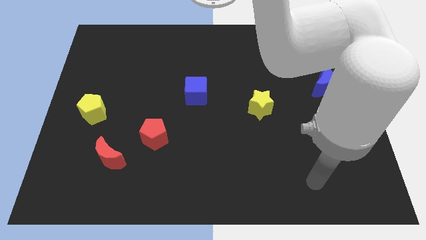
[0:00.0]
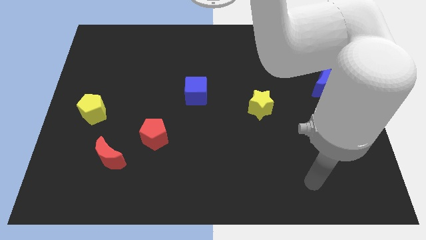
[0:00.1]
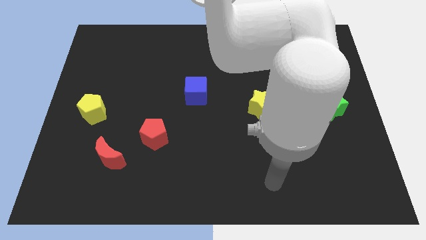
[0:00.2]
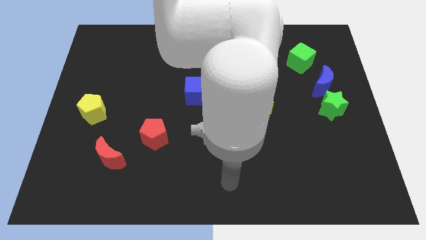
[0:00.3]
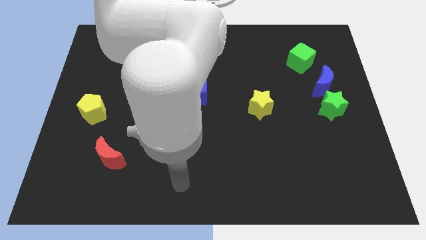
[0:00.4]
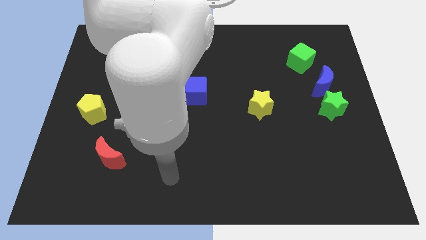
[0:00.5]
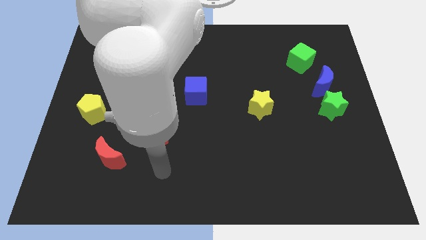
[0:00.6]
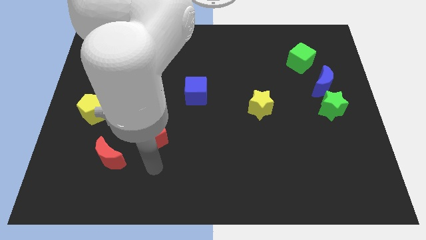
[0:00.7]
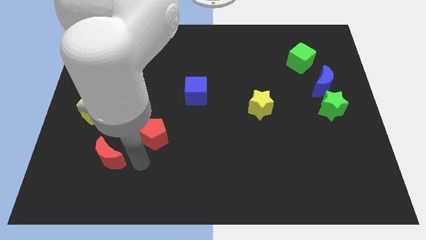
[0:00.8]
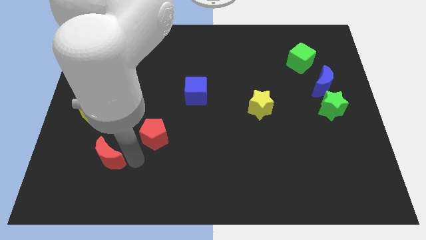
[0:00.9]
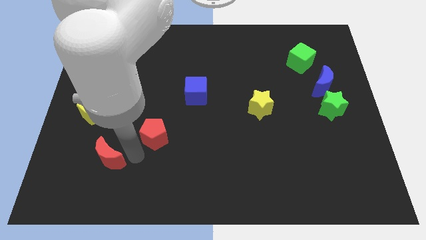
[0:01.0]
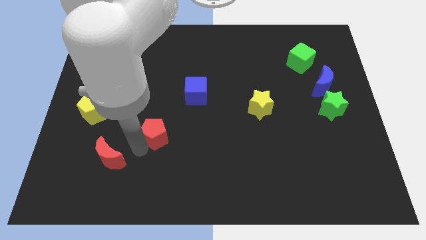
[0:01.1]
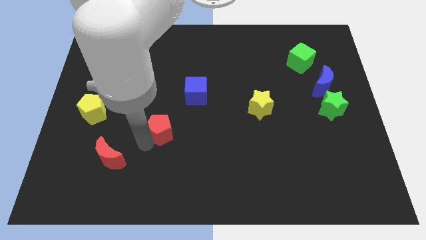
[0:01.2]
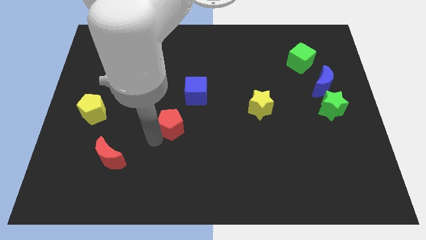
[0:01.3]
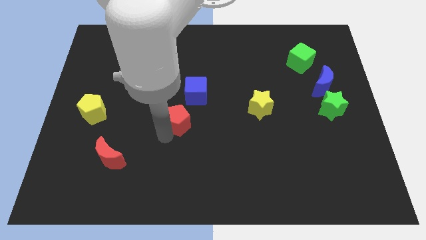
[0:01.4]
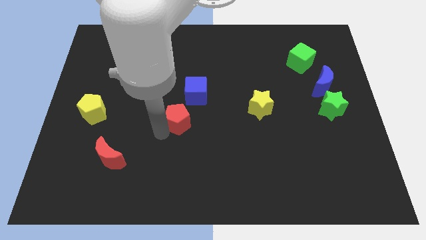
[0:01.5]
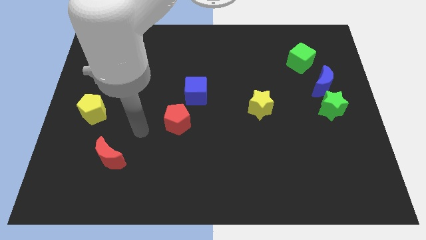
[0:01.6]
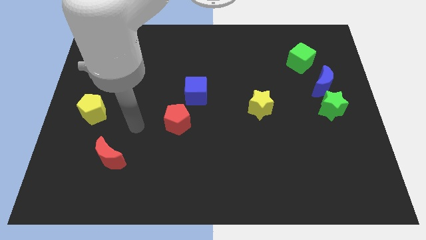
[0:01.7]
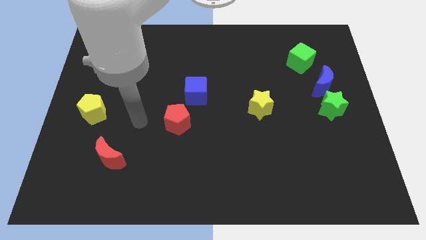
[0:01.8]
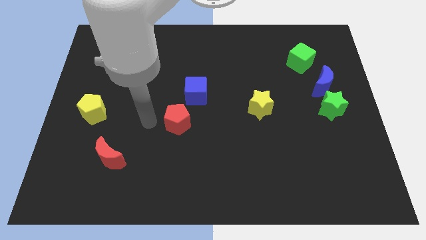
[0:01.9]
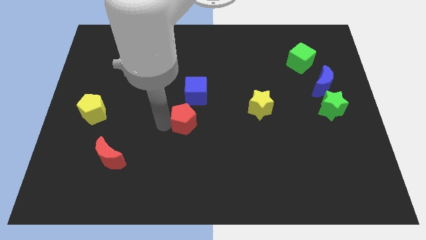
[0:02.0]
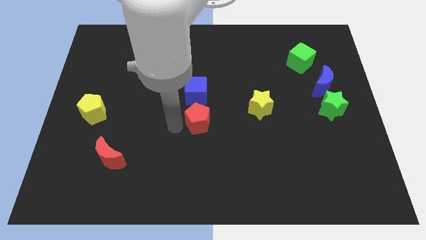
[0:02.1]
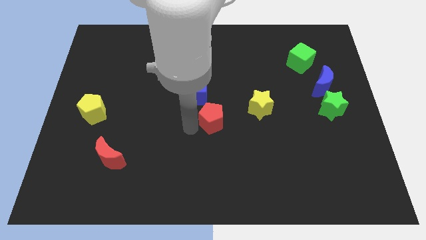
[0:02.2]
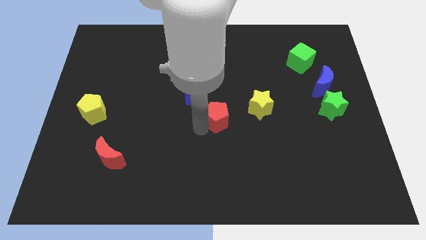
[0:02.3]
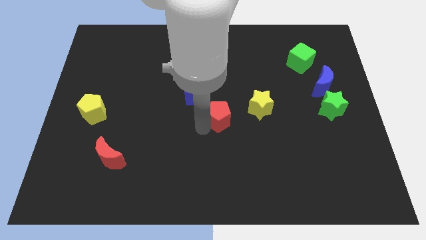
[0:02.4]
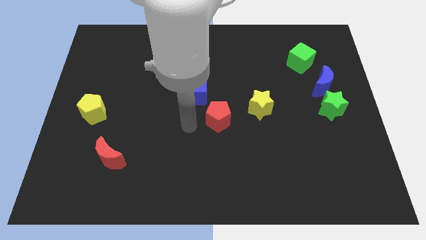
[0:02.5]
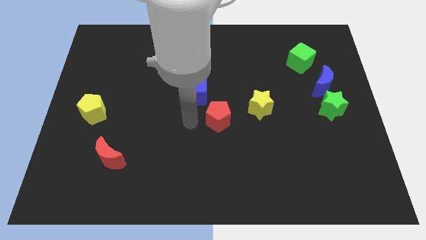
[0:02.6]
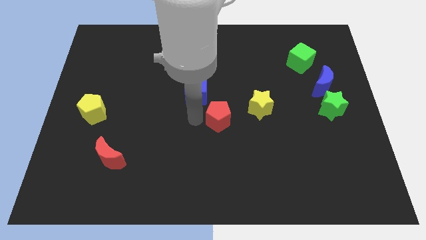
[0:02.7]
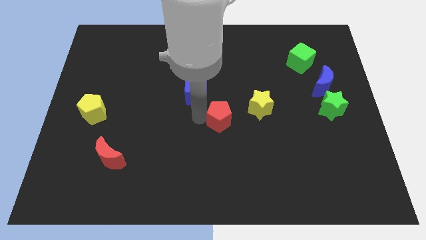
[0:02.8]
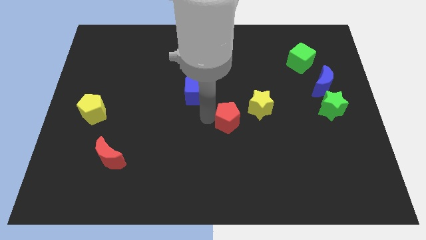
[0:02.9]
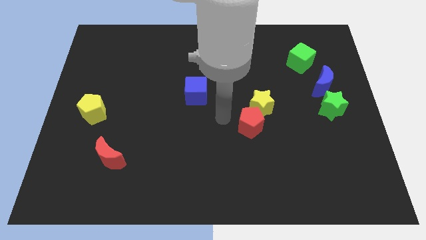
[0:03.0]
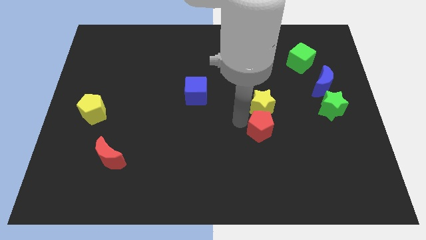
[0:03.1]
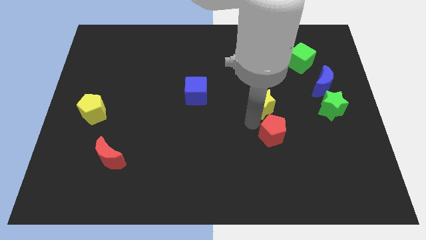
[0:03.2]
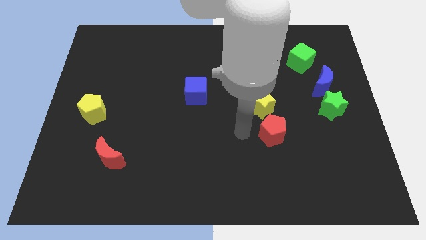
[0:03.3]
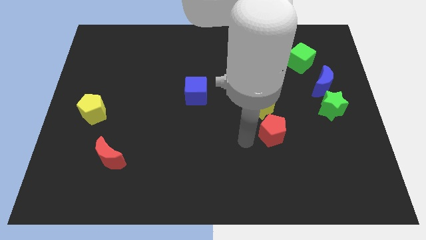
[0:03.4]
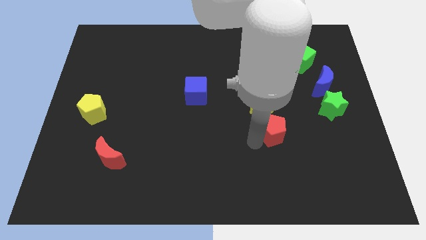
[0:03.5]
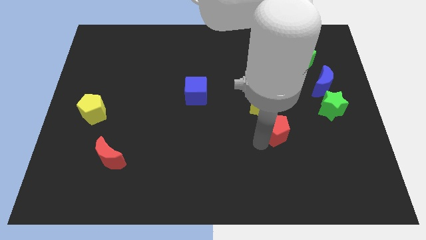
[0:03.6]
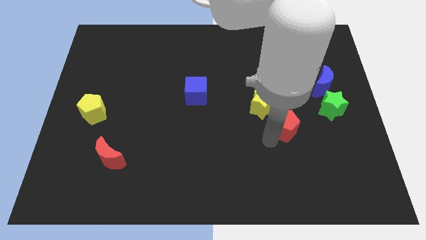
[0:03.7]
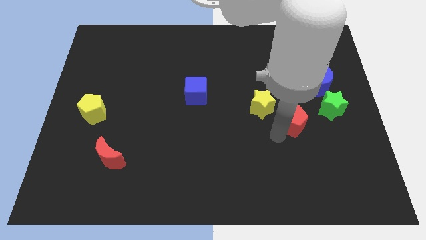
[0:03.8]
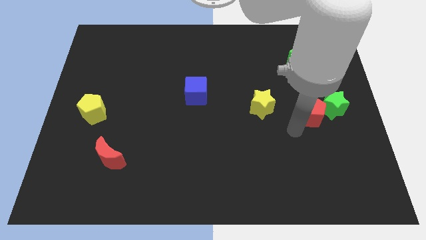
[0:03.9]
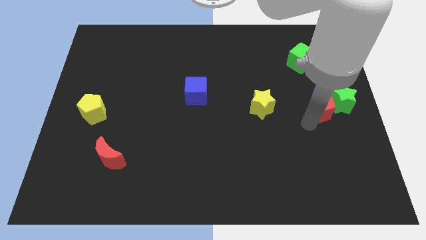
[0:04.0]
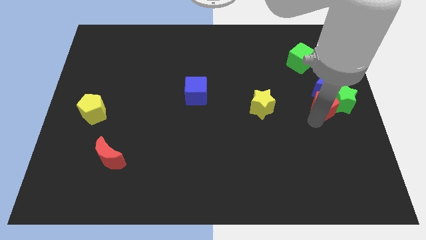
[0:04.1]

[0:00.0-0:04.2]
put the red pentagon to the green star

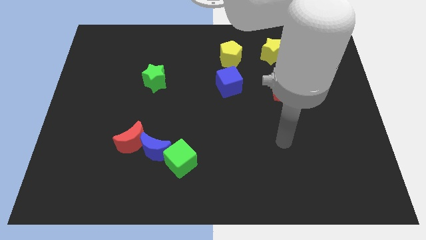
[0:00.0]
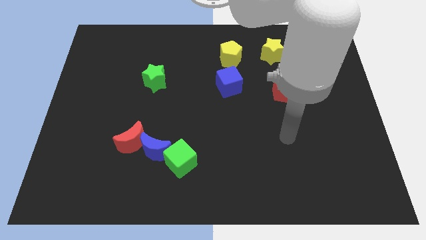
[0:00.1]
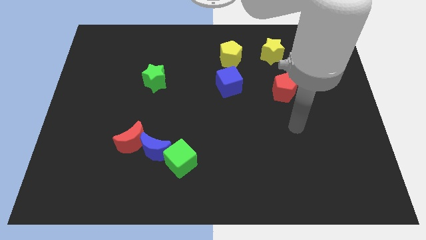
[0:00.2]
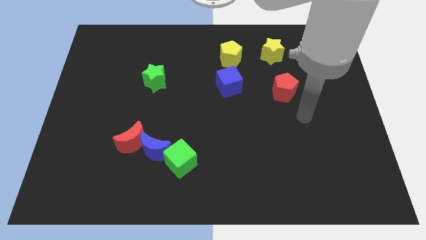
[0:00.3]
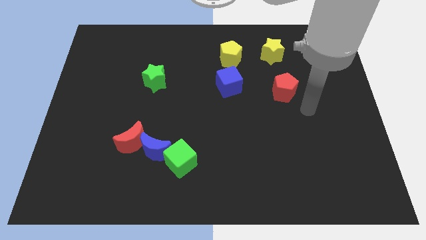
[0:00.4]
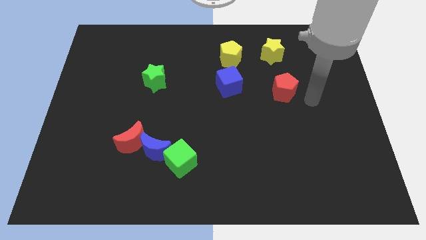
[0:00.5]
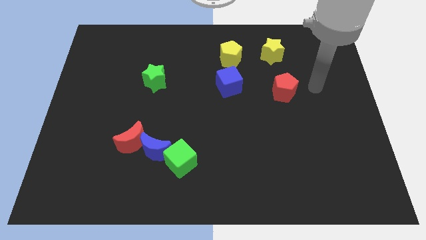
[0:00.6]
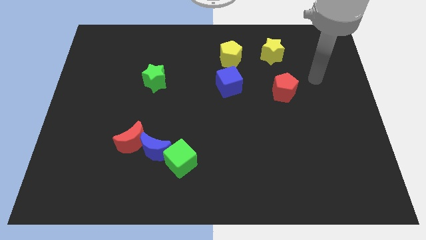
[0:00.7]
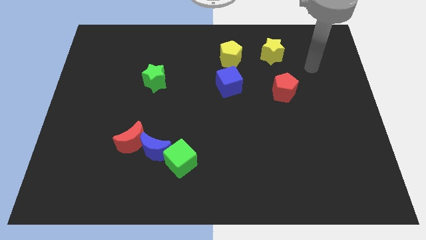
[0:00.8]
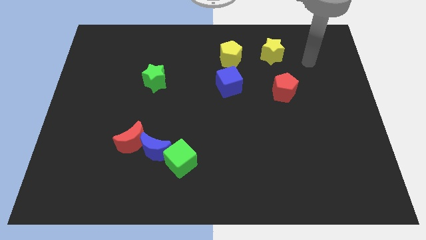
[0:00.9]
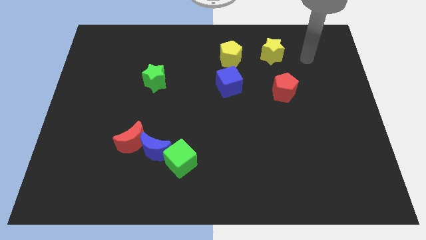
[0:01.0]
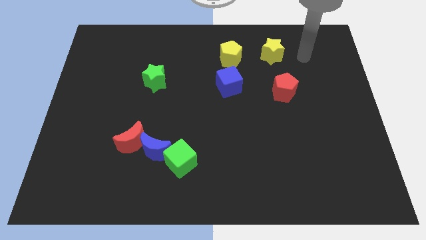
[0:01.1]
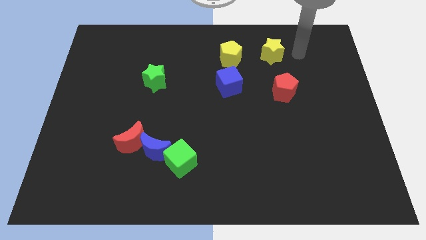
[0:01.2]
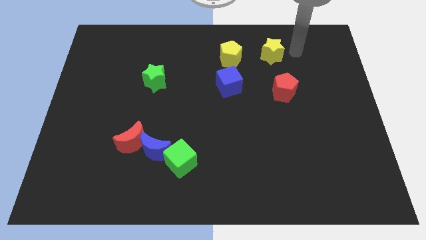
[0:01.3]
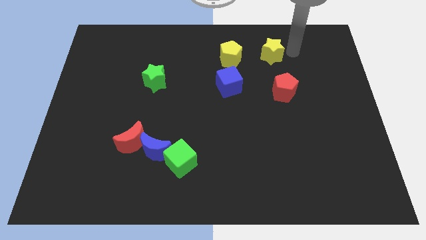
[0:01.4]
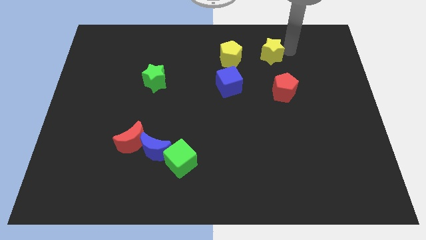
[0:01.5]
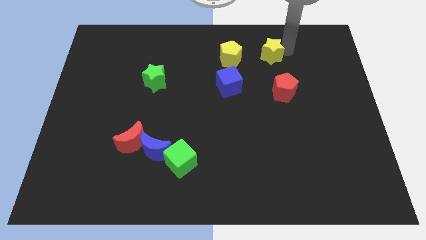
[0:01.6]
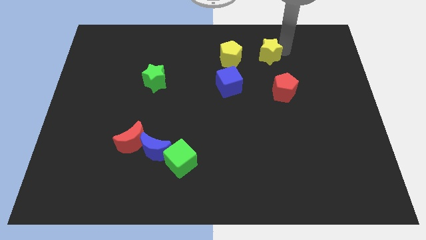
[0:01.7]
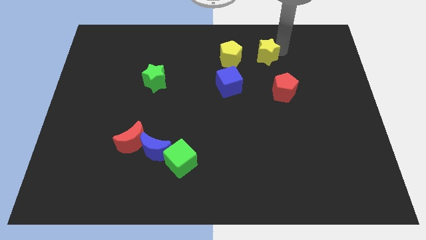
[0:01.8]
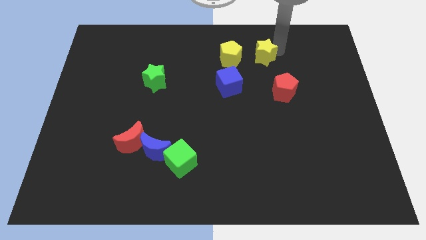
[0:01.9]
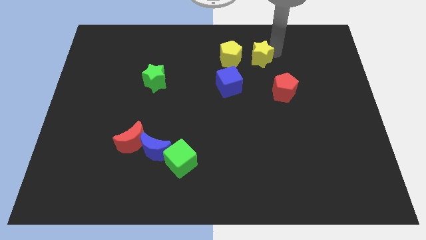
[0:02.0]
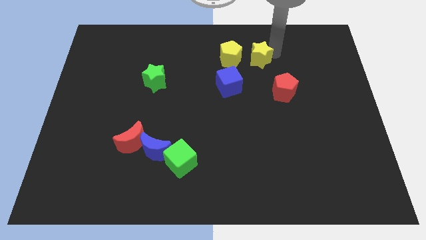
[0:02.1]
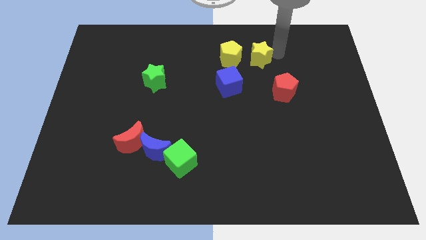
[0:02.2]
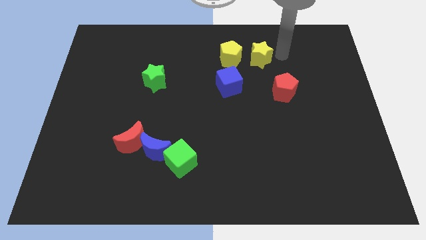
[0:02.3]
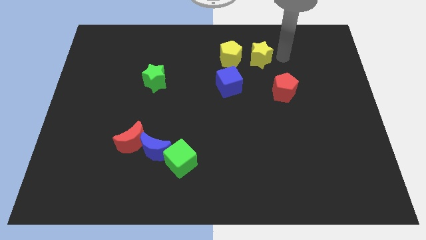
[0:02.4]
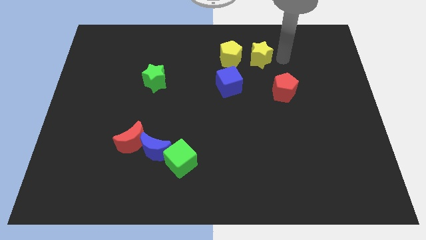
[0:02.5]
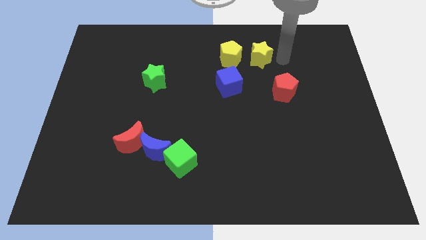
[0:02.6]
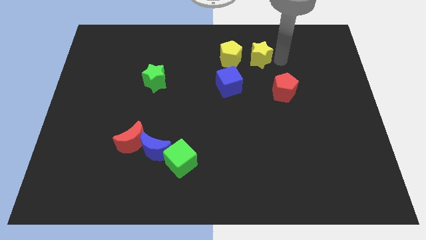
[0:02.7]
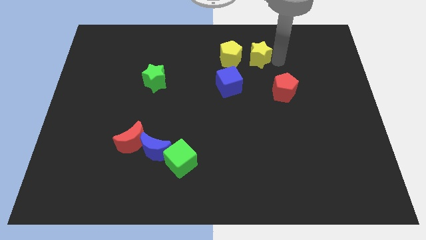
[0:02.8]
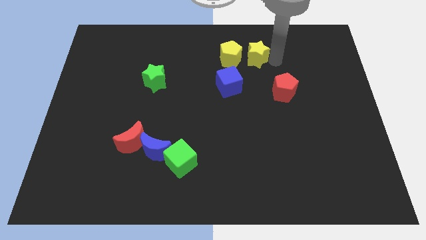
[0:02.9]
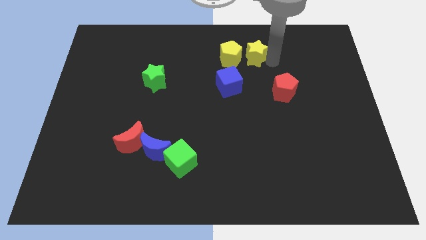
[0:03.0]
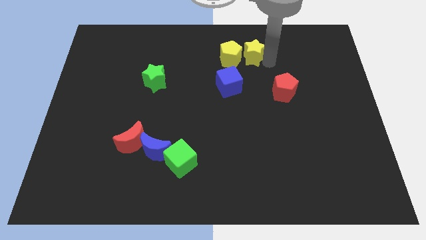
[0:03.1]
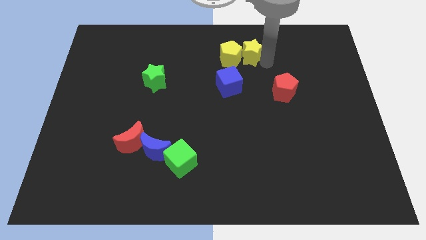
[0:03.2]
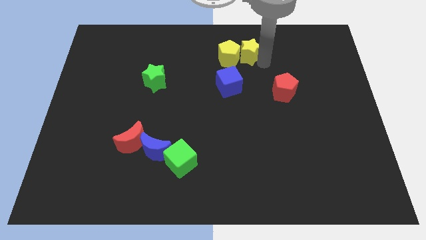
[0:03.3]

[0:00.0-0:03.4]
slide the yellow star next to the yellow pentagon

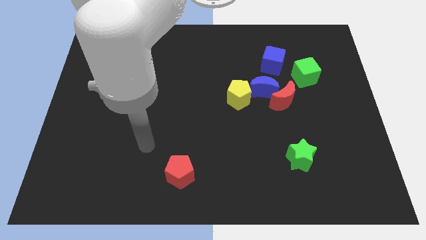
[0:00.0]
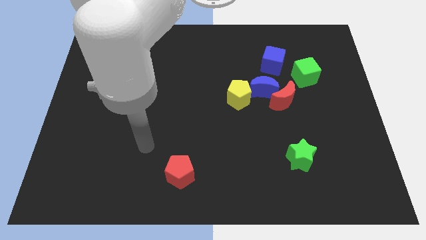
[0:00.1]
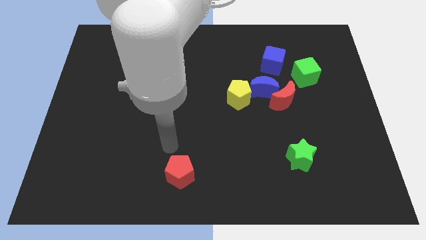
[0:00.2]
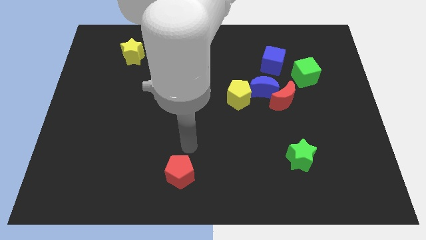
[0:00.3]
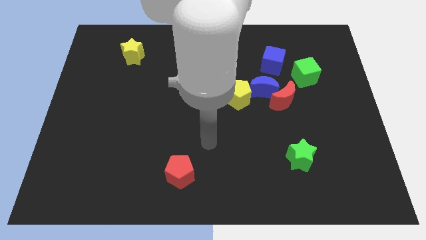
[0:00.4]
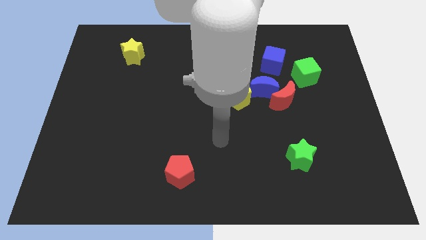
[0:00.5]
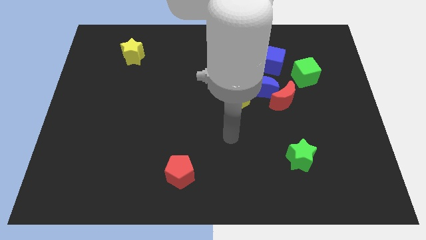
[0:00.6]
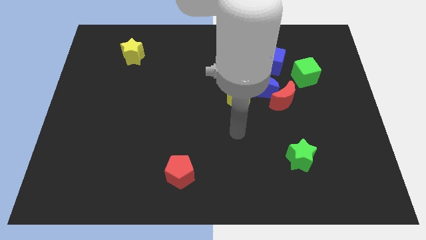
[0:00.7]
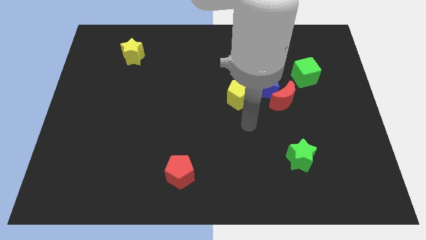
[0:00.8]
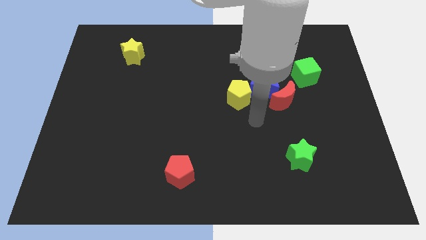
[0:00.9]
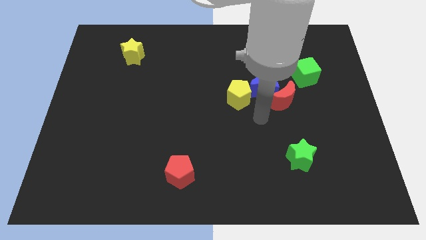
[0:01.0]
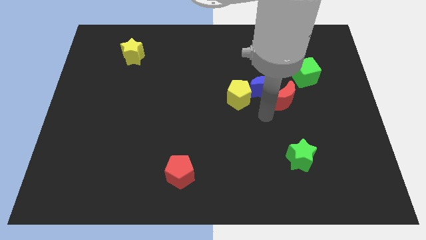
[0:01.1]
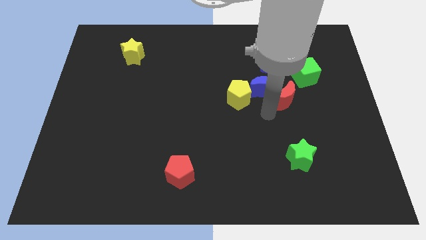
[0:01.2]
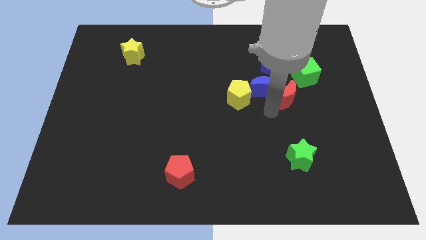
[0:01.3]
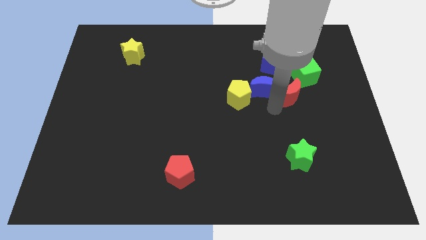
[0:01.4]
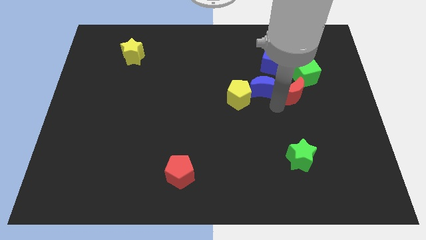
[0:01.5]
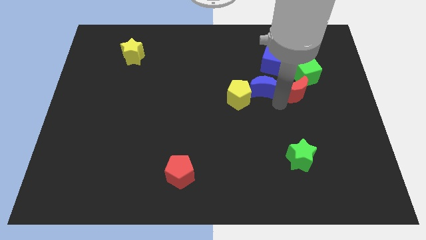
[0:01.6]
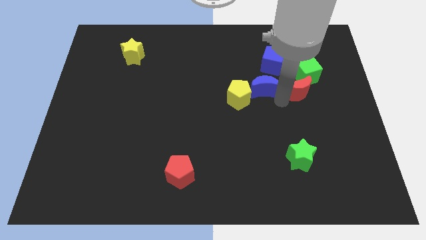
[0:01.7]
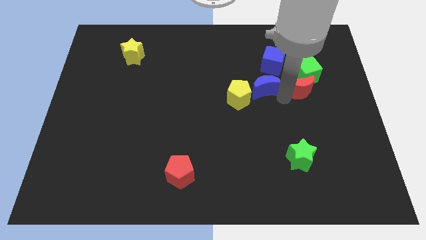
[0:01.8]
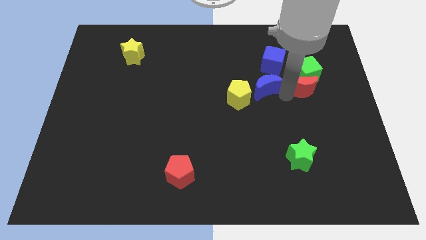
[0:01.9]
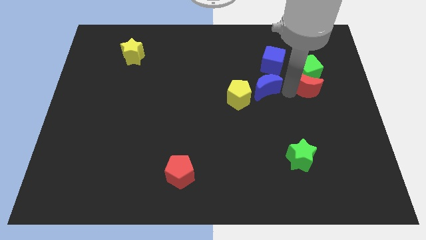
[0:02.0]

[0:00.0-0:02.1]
push the red moon close to the green cube
